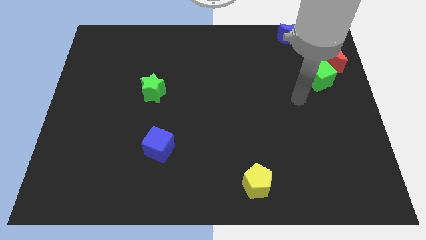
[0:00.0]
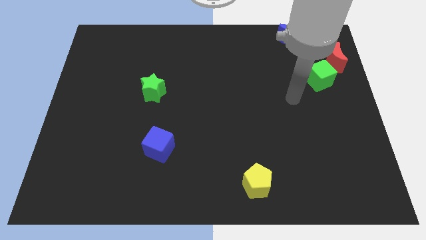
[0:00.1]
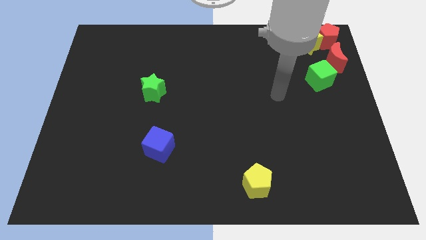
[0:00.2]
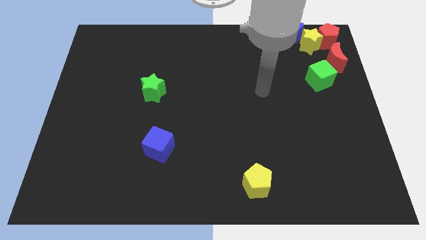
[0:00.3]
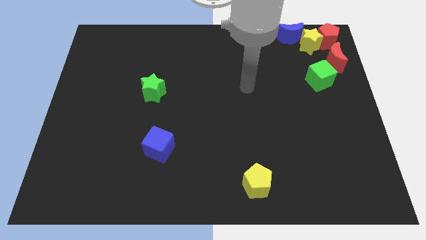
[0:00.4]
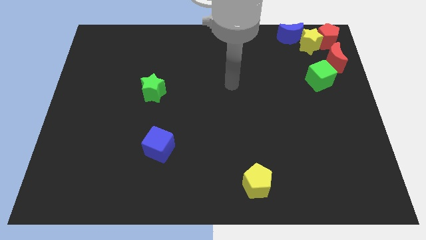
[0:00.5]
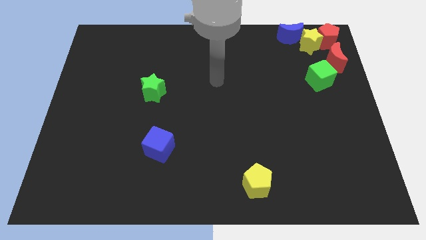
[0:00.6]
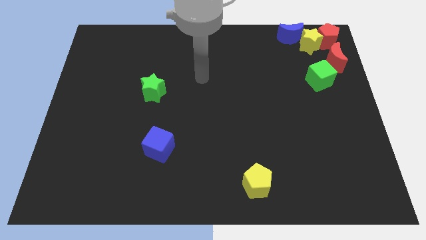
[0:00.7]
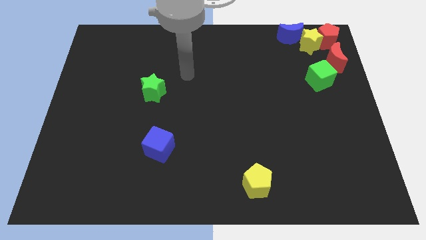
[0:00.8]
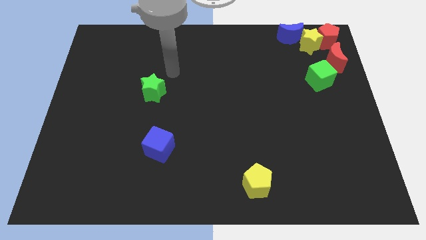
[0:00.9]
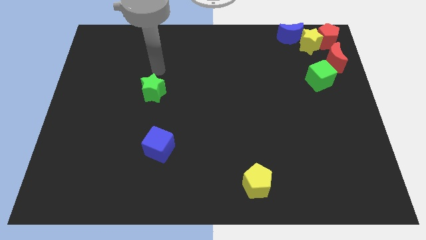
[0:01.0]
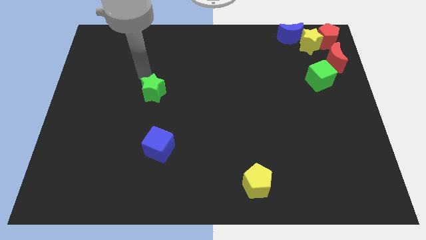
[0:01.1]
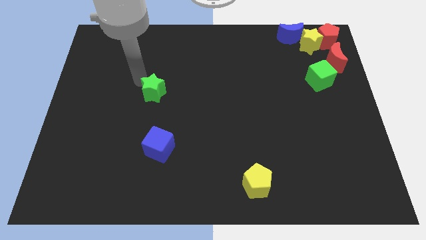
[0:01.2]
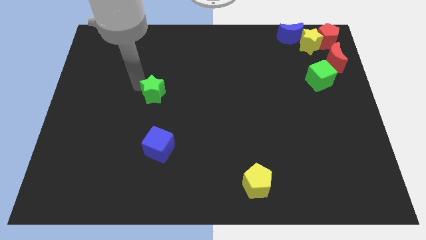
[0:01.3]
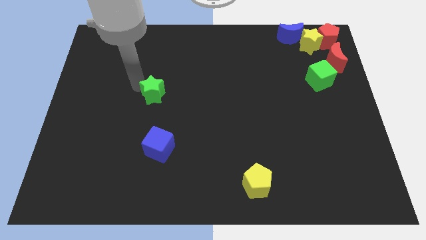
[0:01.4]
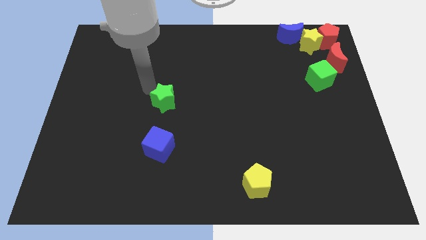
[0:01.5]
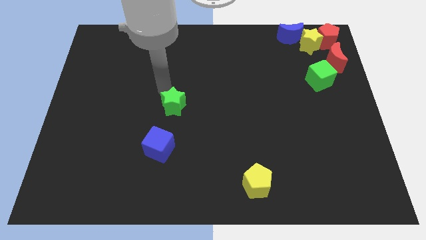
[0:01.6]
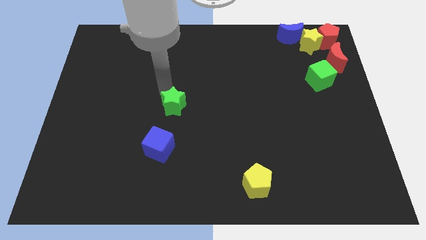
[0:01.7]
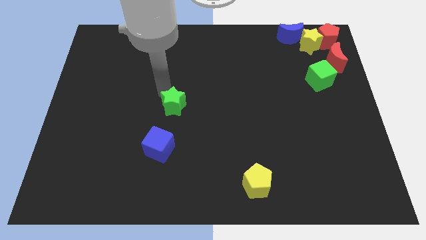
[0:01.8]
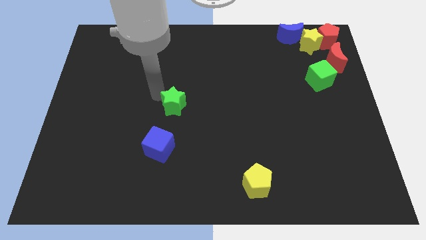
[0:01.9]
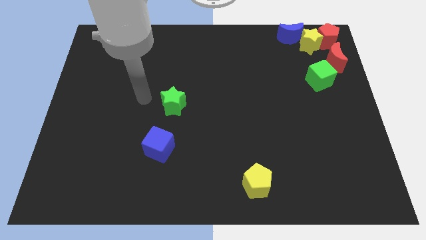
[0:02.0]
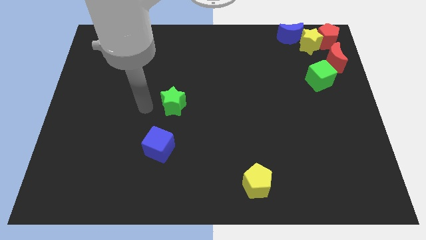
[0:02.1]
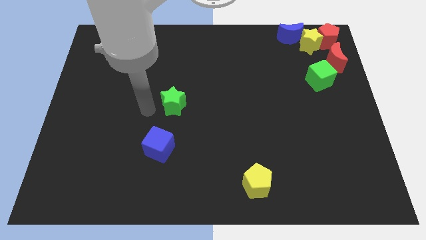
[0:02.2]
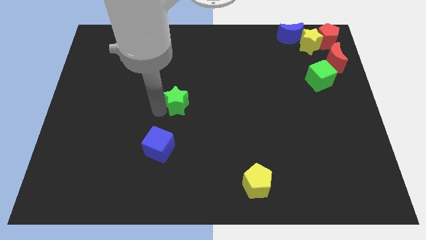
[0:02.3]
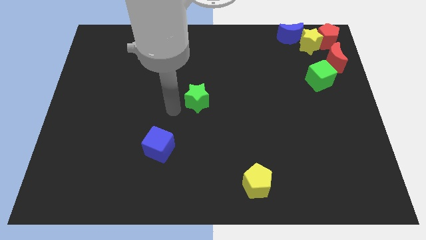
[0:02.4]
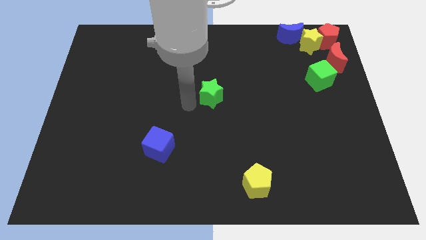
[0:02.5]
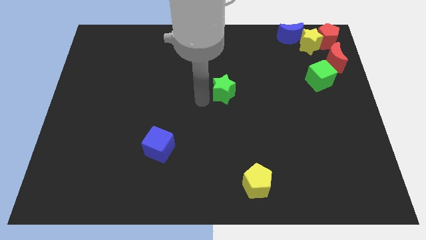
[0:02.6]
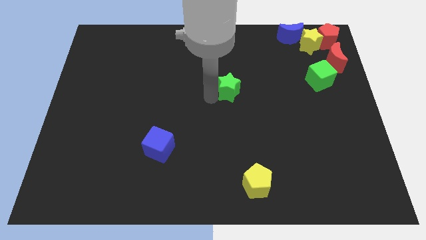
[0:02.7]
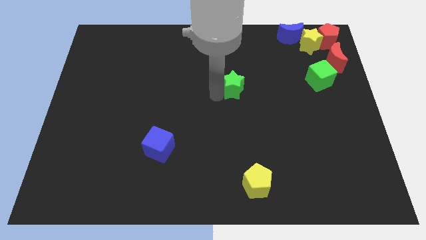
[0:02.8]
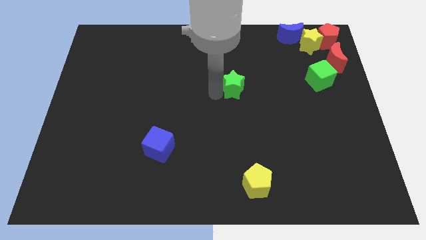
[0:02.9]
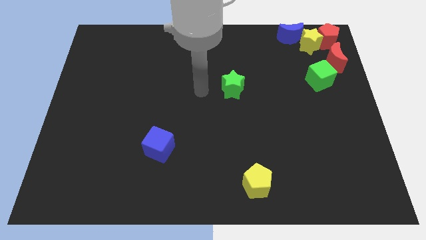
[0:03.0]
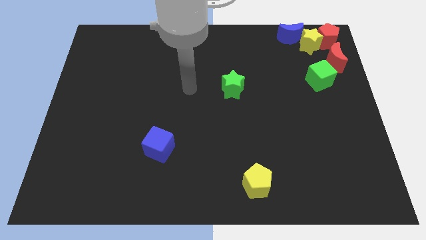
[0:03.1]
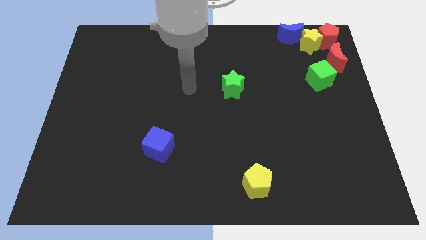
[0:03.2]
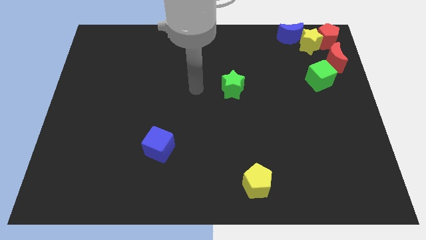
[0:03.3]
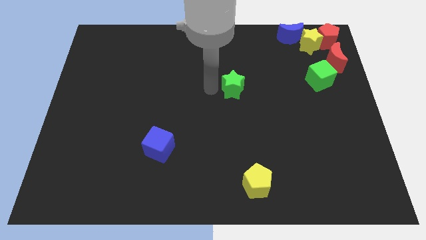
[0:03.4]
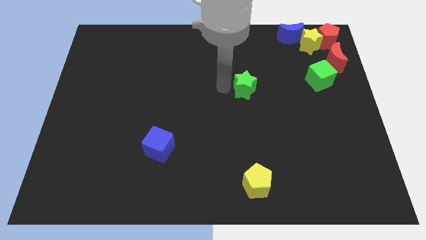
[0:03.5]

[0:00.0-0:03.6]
place green star above yellow pentagon

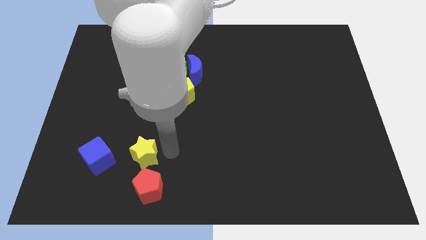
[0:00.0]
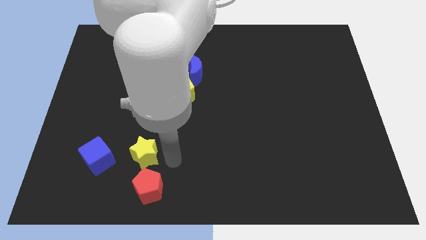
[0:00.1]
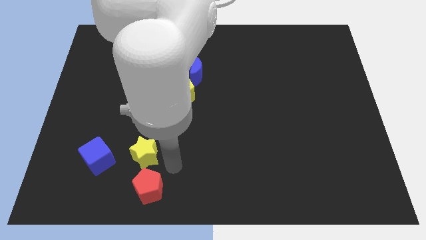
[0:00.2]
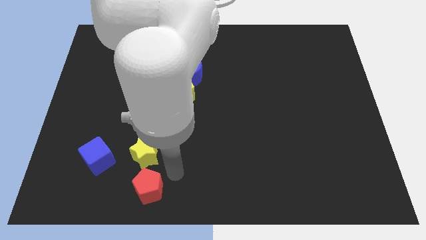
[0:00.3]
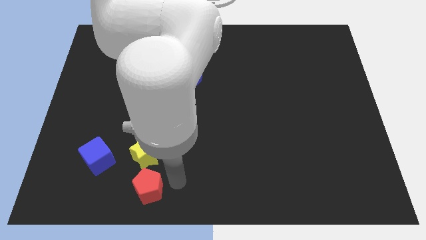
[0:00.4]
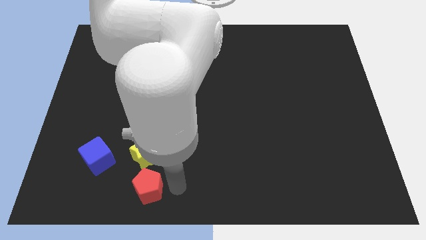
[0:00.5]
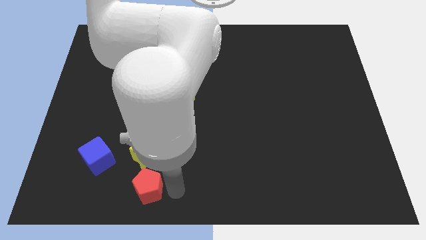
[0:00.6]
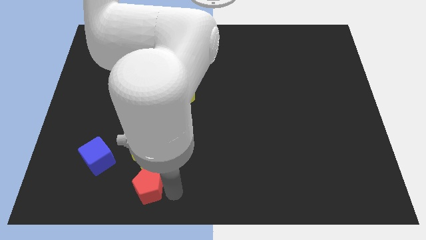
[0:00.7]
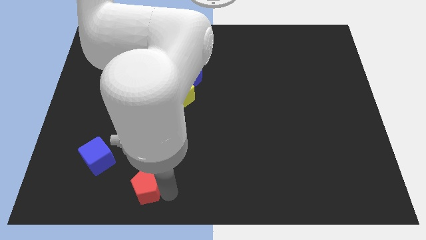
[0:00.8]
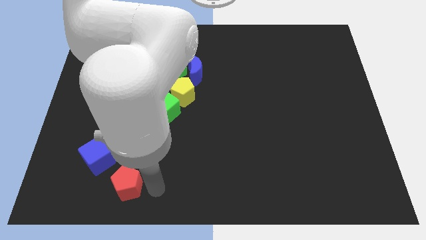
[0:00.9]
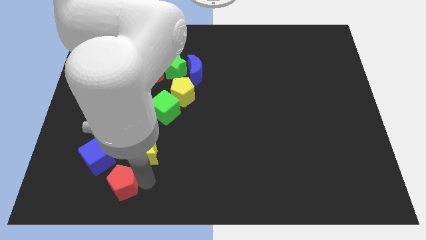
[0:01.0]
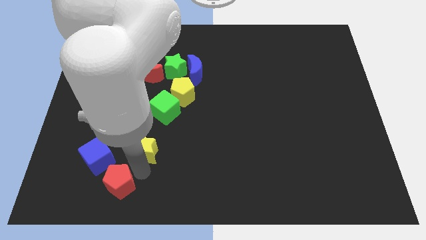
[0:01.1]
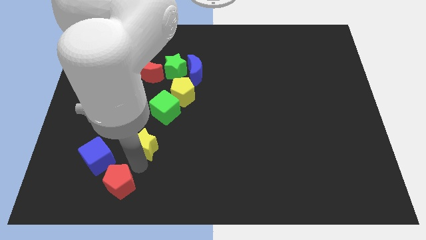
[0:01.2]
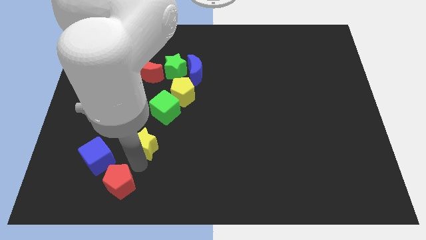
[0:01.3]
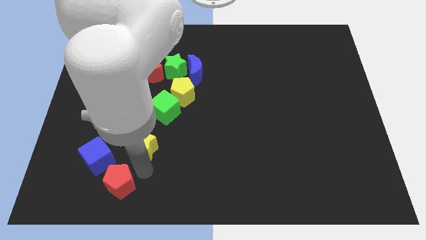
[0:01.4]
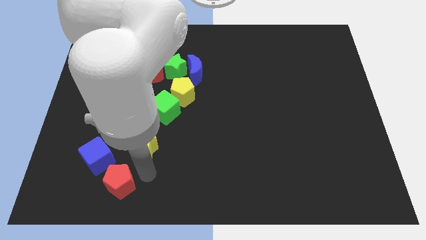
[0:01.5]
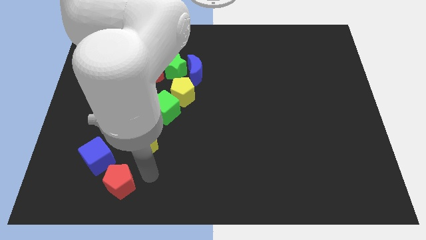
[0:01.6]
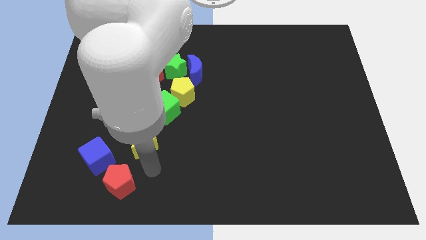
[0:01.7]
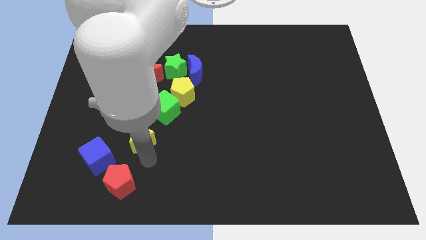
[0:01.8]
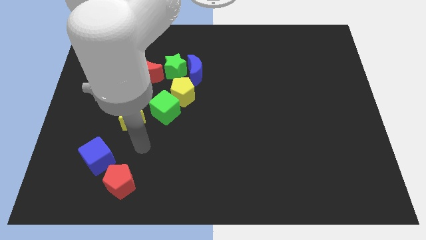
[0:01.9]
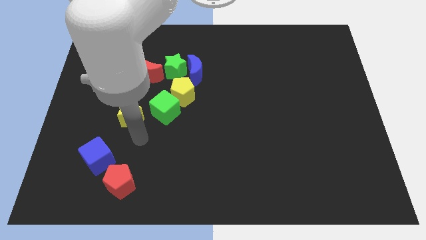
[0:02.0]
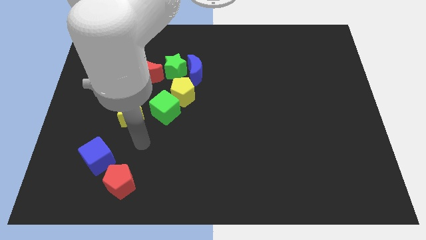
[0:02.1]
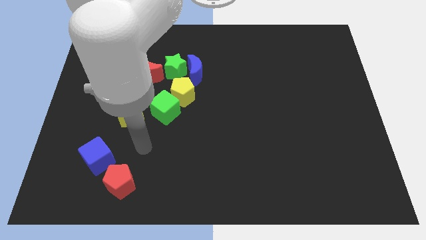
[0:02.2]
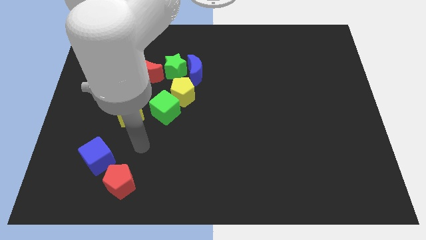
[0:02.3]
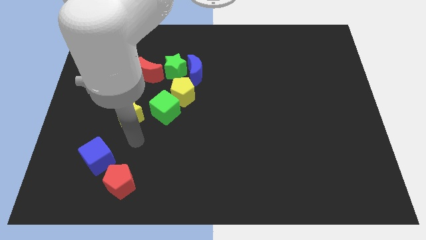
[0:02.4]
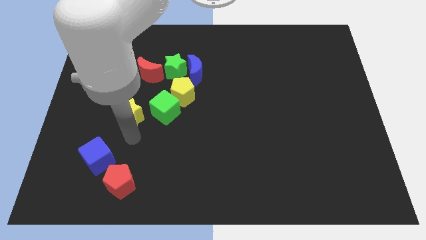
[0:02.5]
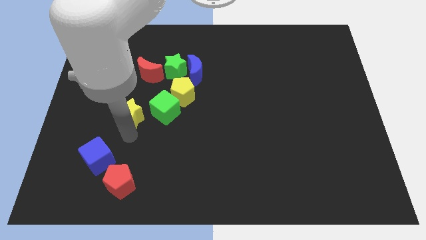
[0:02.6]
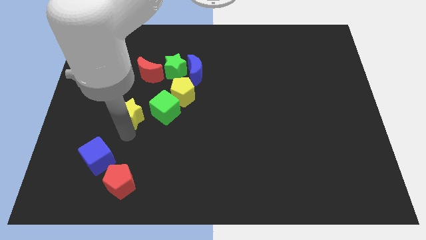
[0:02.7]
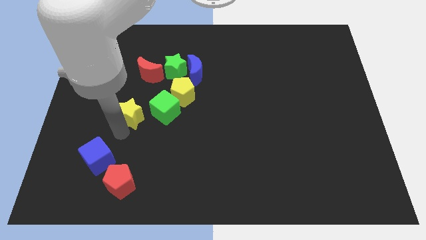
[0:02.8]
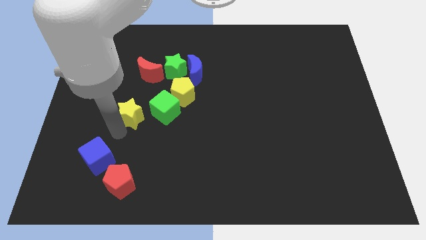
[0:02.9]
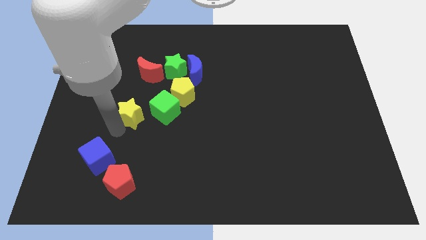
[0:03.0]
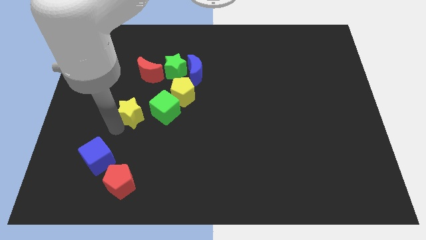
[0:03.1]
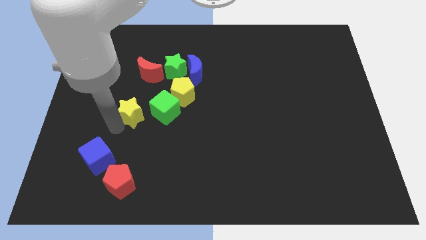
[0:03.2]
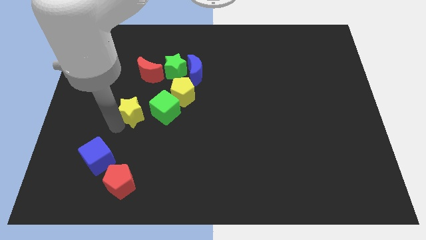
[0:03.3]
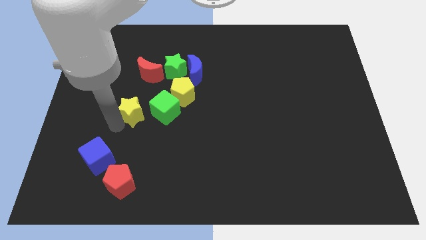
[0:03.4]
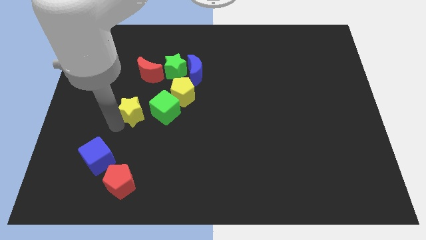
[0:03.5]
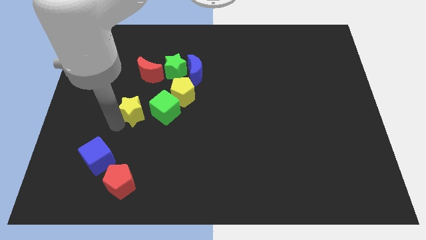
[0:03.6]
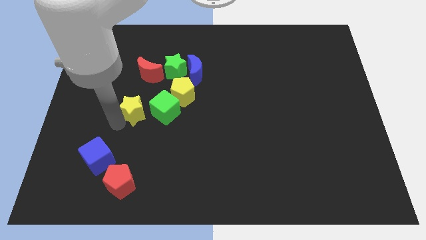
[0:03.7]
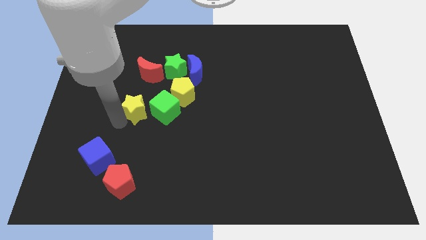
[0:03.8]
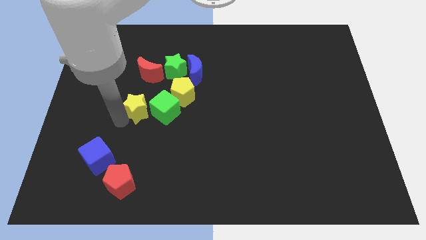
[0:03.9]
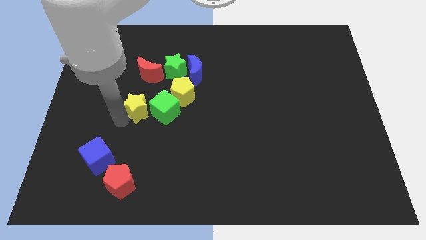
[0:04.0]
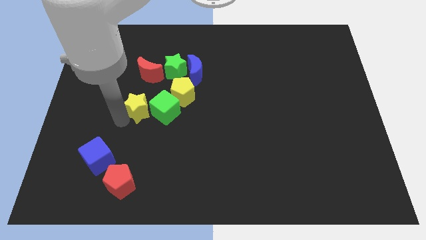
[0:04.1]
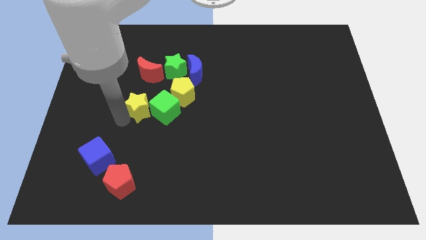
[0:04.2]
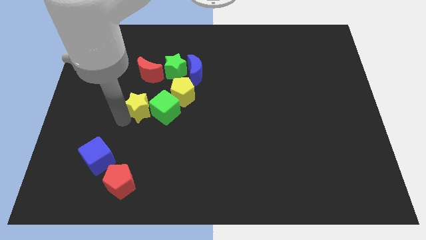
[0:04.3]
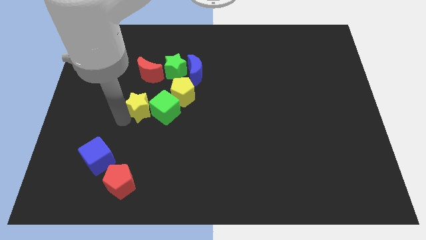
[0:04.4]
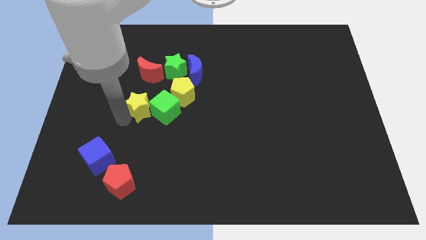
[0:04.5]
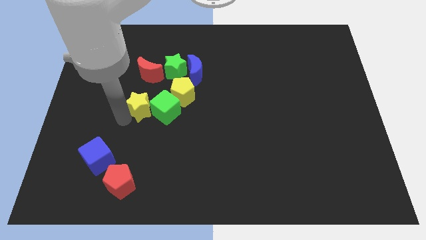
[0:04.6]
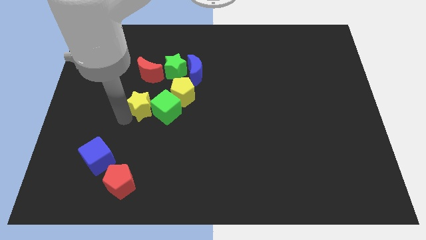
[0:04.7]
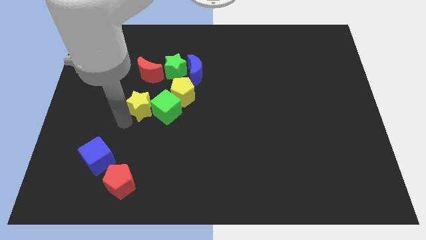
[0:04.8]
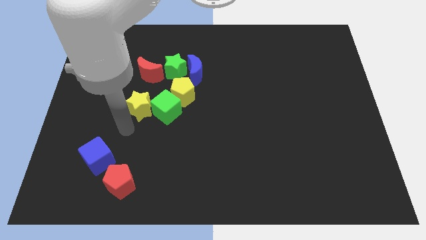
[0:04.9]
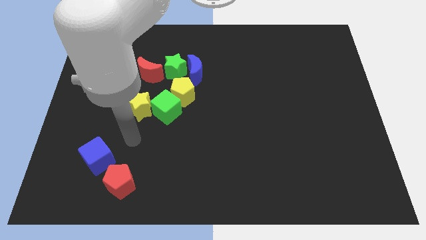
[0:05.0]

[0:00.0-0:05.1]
push the yellow star to left of the green cube

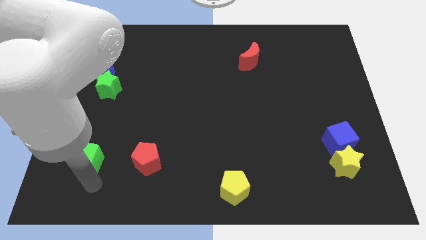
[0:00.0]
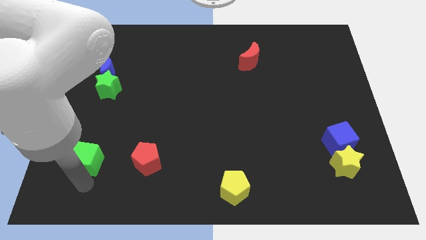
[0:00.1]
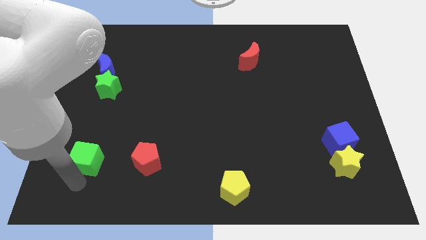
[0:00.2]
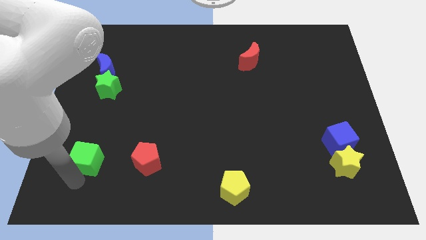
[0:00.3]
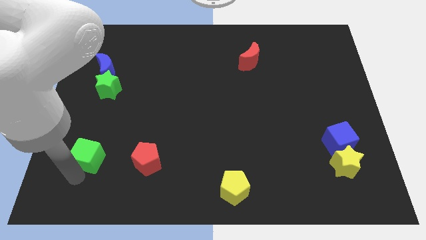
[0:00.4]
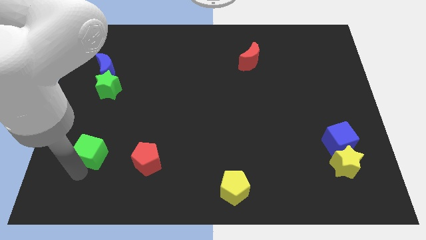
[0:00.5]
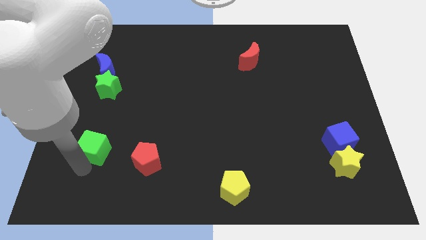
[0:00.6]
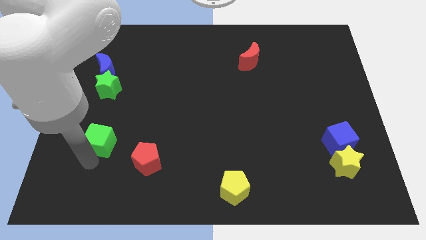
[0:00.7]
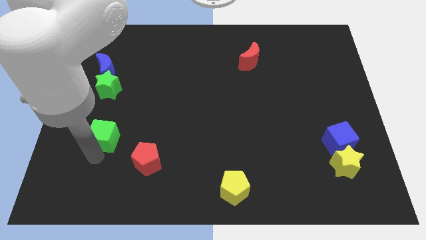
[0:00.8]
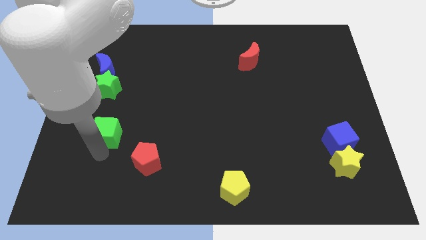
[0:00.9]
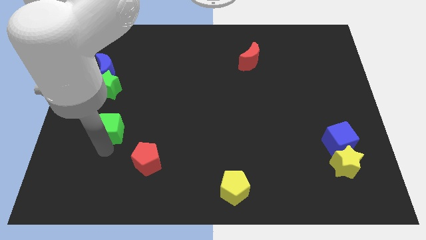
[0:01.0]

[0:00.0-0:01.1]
push the green cube slightly to the top
